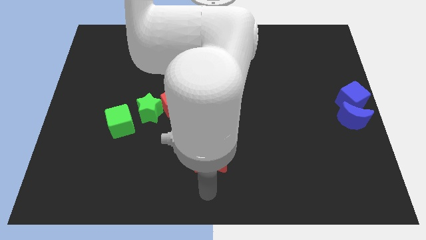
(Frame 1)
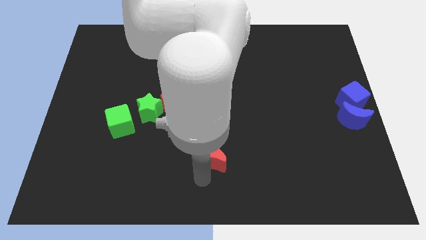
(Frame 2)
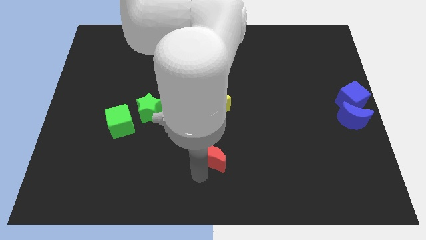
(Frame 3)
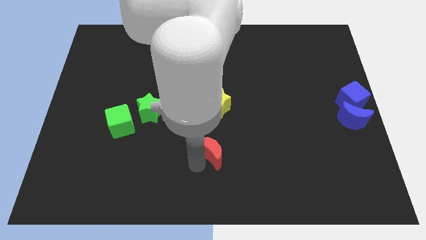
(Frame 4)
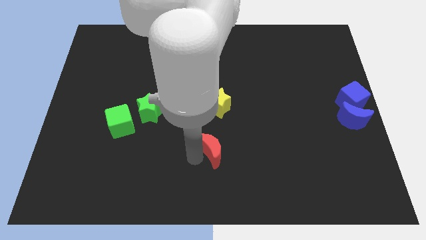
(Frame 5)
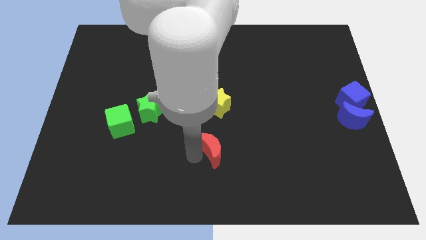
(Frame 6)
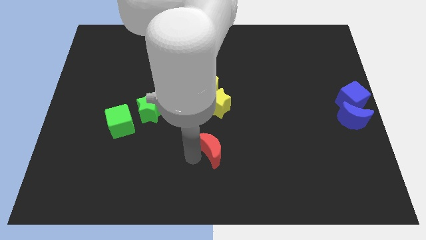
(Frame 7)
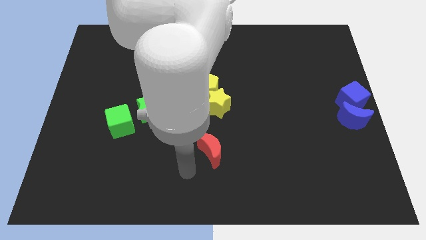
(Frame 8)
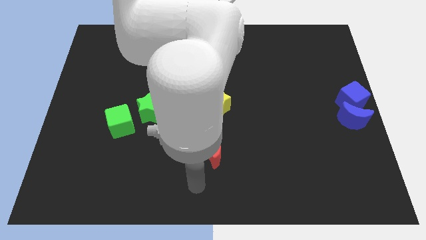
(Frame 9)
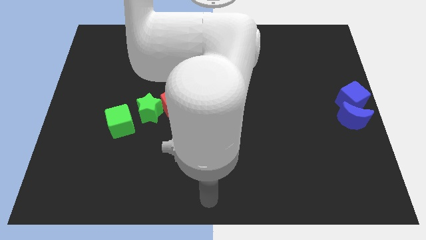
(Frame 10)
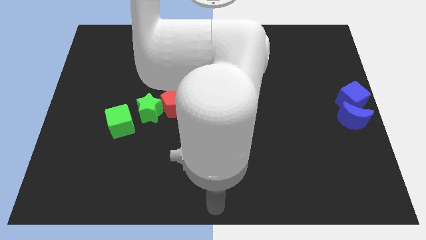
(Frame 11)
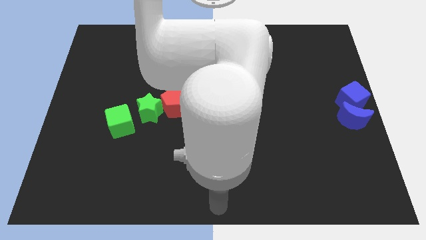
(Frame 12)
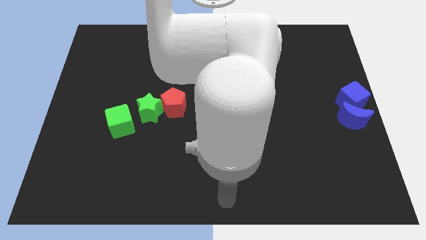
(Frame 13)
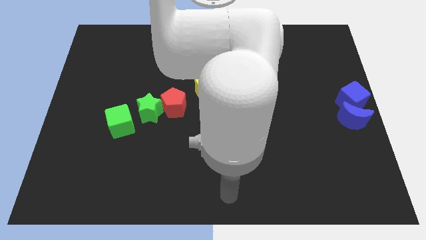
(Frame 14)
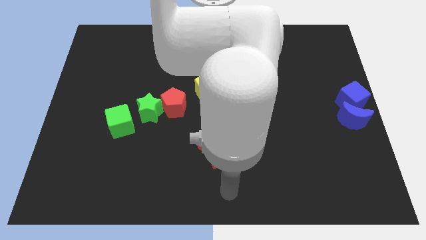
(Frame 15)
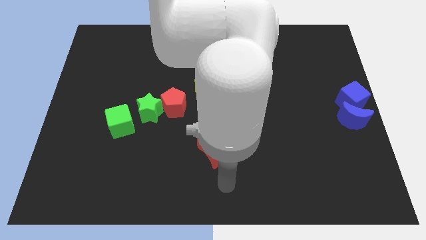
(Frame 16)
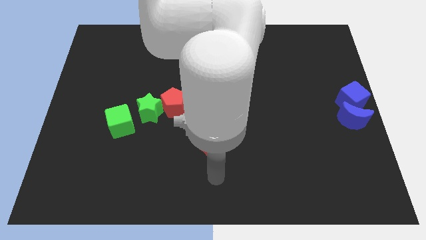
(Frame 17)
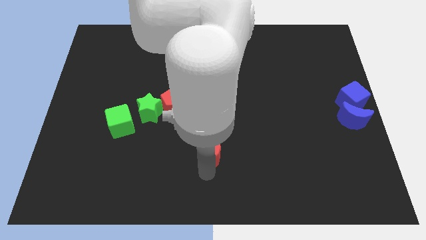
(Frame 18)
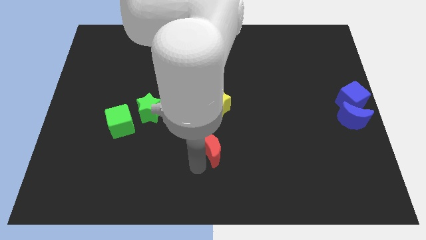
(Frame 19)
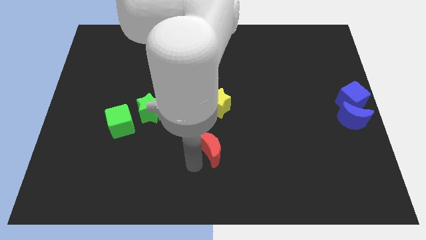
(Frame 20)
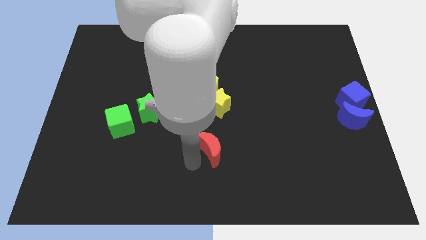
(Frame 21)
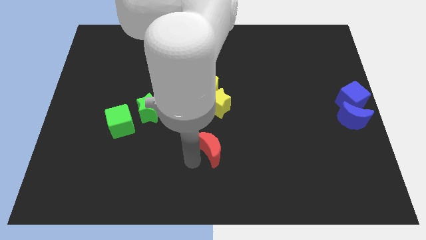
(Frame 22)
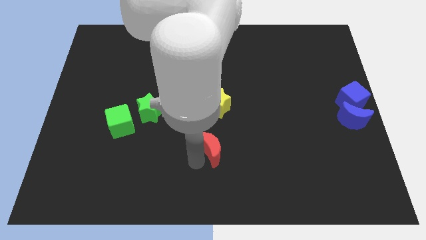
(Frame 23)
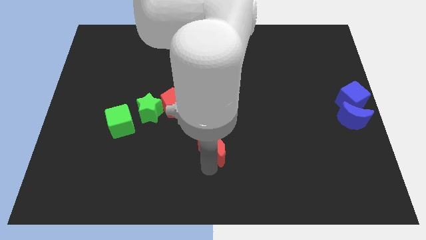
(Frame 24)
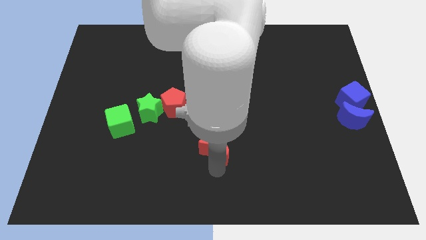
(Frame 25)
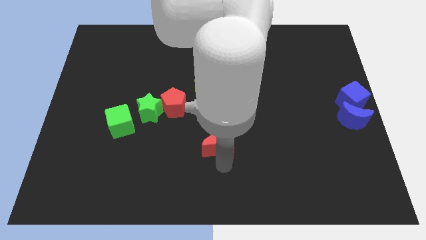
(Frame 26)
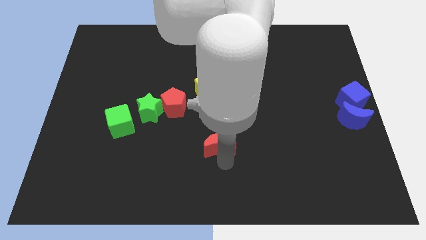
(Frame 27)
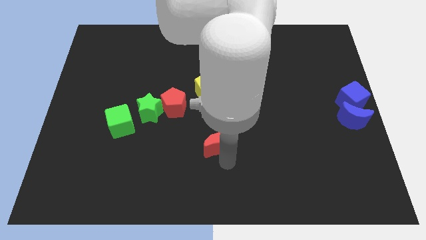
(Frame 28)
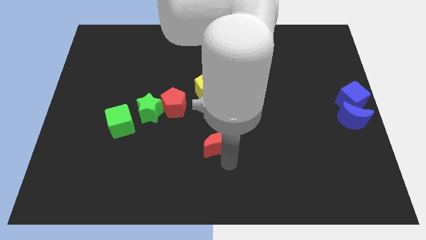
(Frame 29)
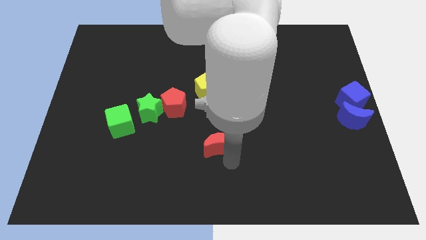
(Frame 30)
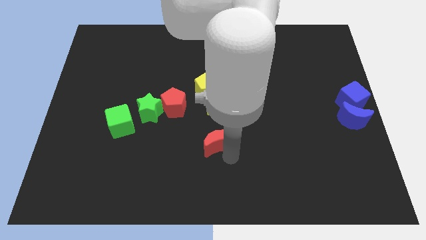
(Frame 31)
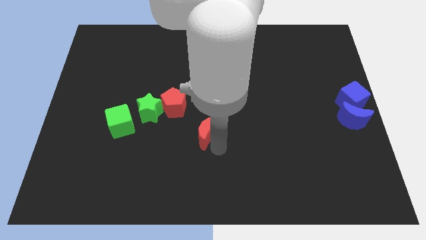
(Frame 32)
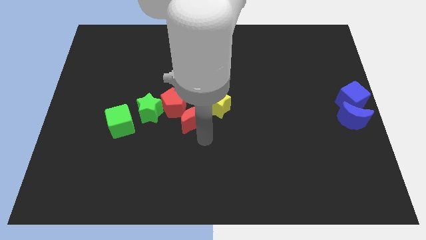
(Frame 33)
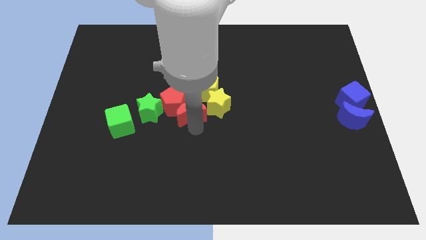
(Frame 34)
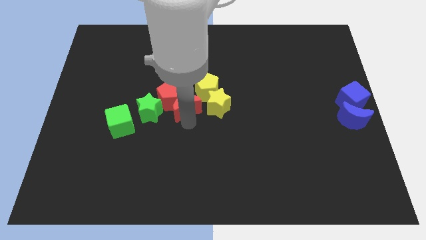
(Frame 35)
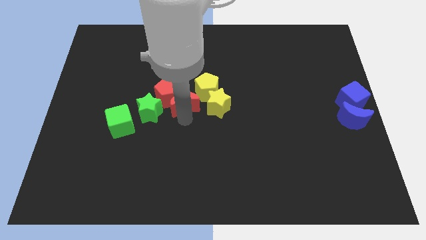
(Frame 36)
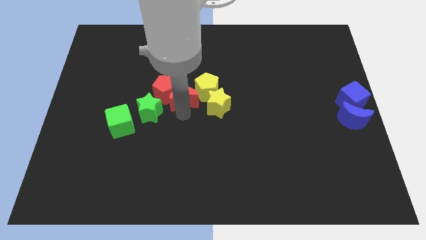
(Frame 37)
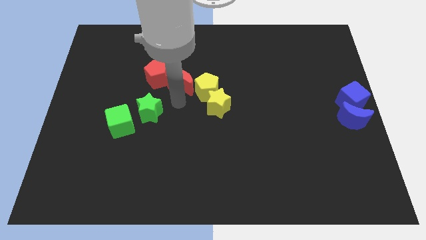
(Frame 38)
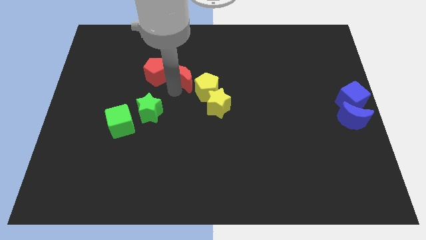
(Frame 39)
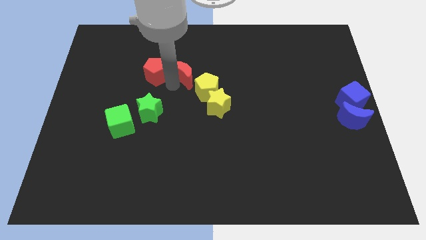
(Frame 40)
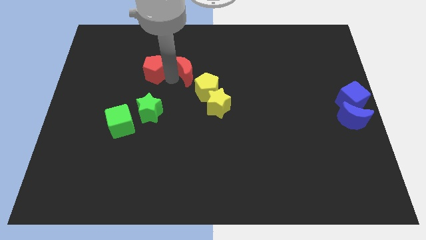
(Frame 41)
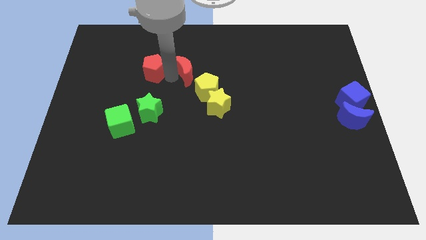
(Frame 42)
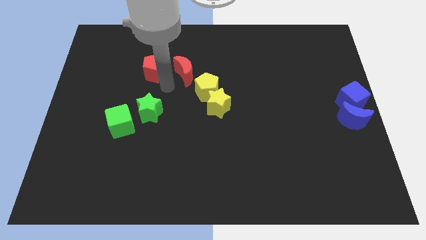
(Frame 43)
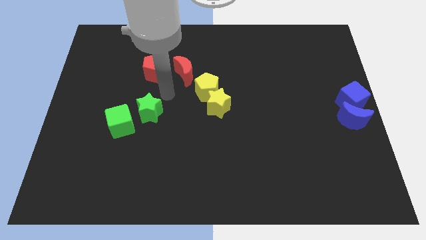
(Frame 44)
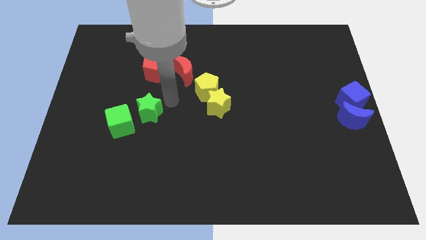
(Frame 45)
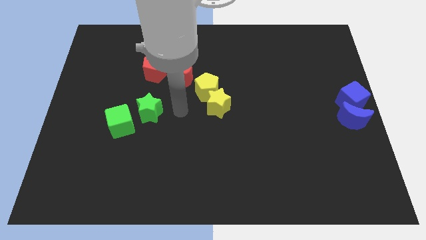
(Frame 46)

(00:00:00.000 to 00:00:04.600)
push the red pentagon with the red crescent towards the top left of the board

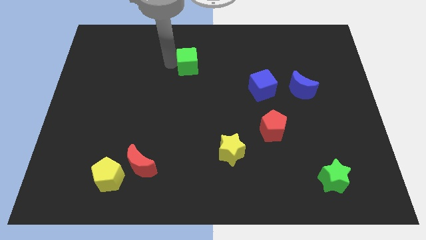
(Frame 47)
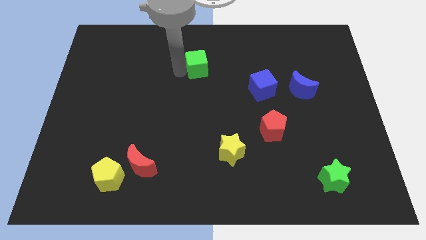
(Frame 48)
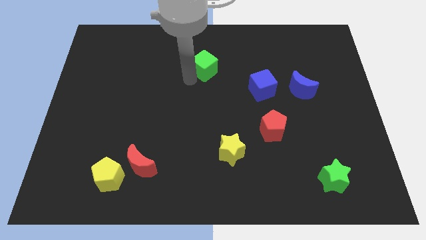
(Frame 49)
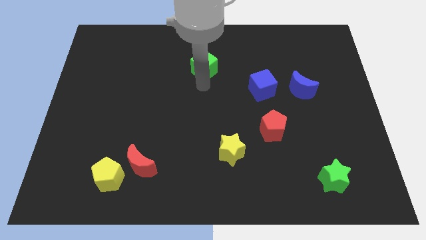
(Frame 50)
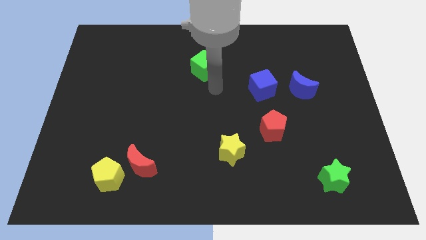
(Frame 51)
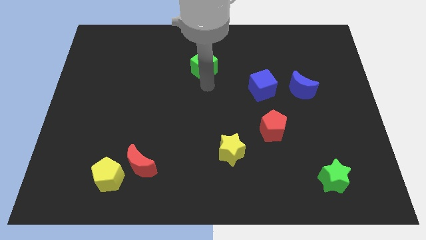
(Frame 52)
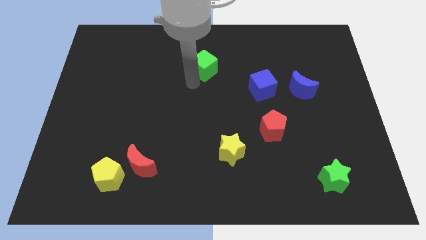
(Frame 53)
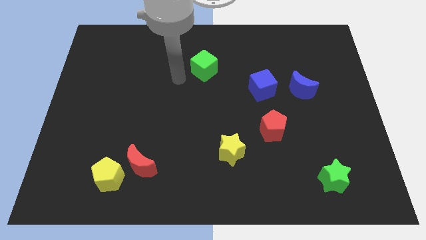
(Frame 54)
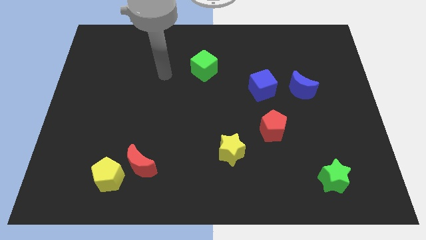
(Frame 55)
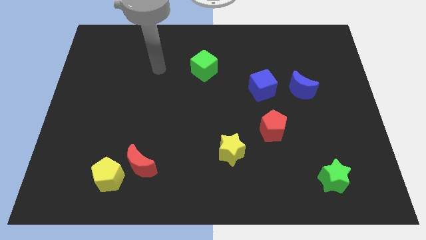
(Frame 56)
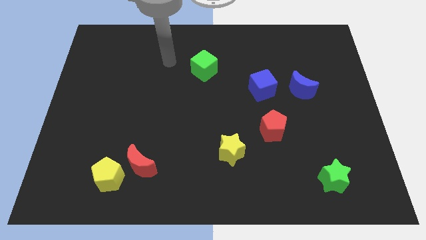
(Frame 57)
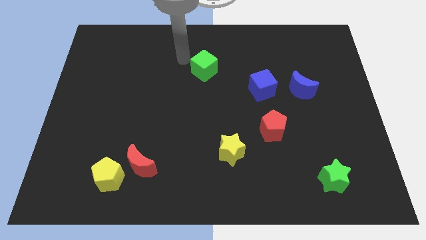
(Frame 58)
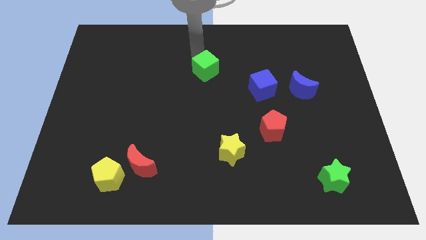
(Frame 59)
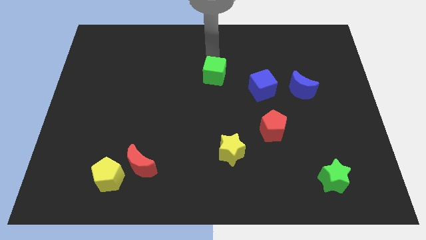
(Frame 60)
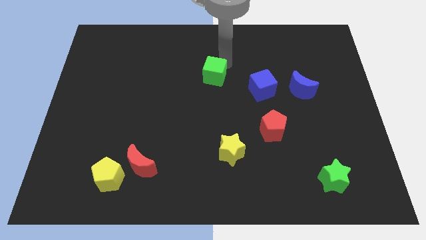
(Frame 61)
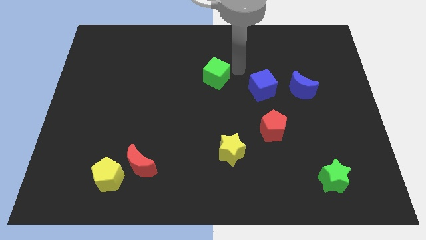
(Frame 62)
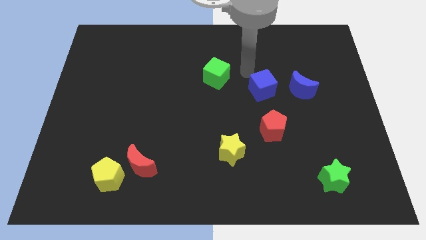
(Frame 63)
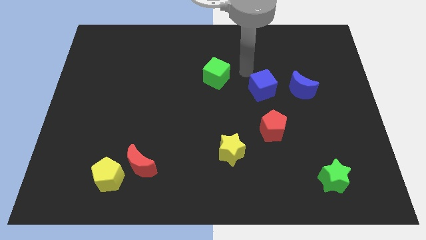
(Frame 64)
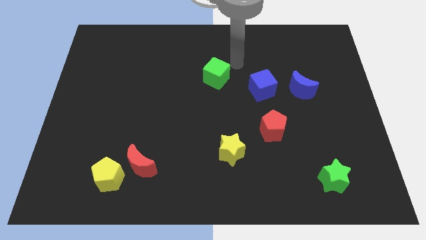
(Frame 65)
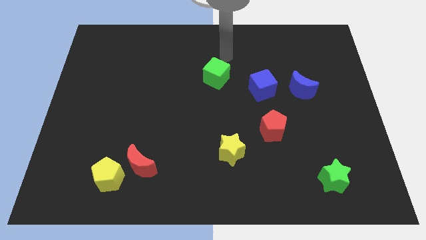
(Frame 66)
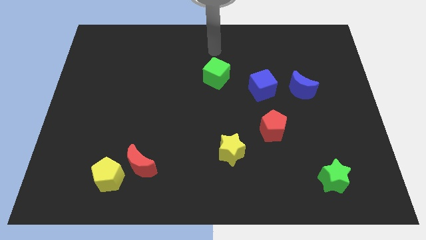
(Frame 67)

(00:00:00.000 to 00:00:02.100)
slide green cube towards blue cube

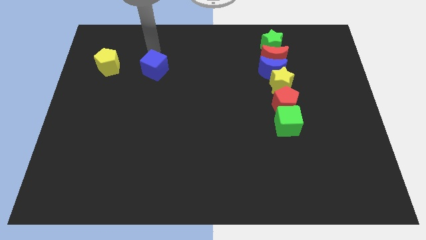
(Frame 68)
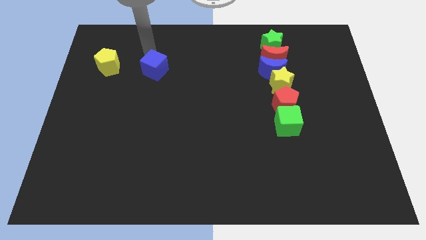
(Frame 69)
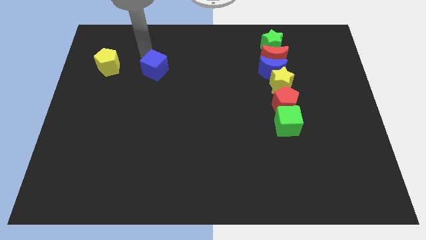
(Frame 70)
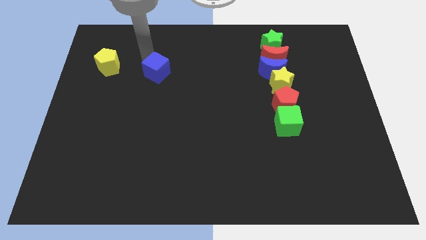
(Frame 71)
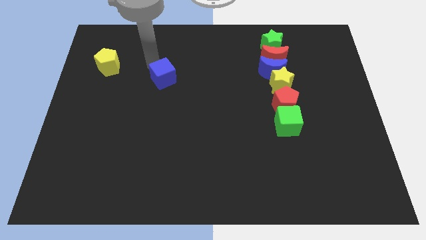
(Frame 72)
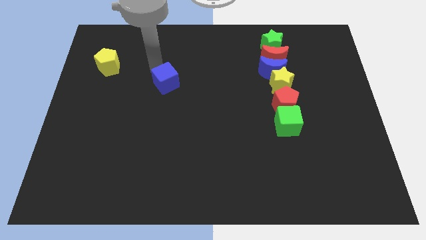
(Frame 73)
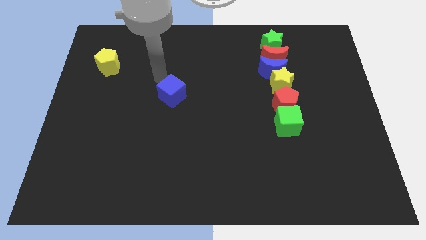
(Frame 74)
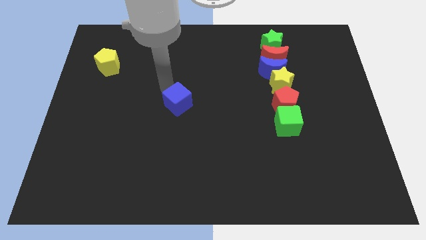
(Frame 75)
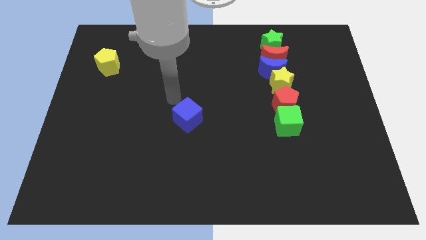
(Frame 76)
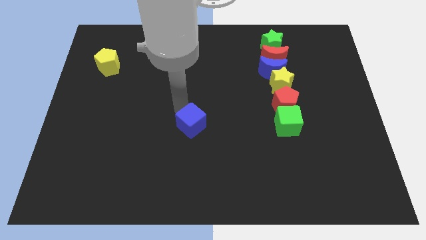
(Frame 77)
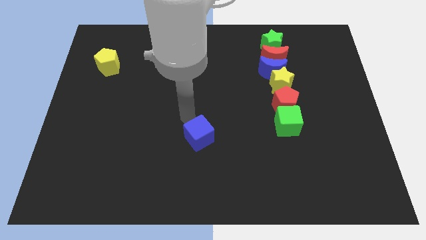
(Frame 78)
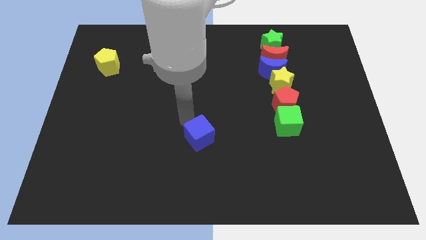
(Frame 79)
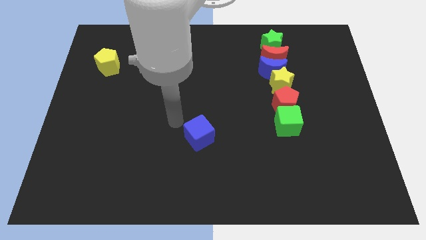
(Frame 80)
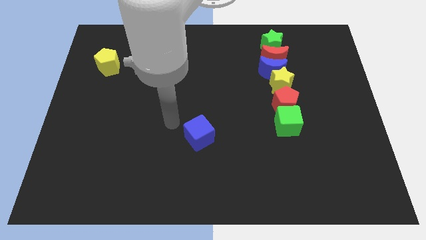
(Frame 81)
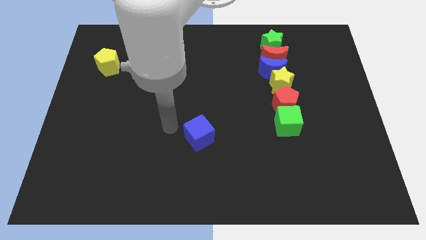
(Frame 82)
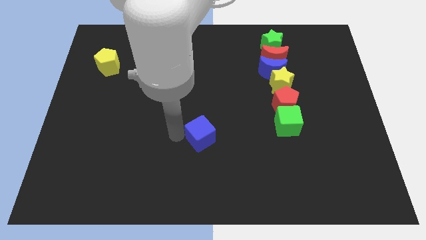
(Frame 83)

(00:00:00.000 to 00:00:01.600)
push the blue cube to the bottom of the board

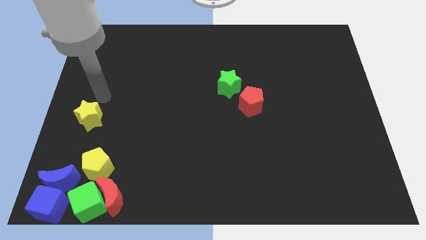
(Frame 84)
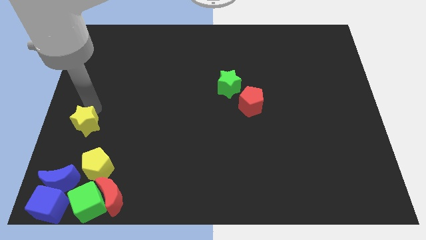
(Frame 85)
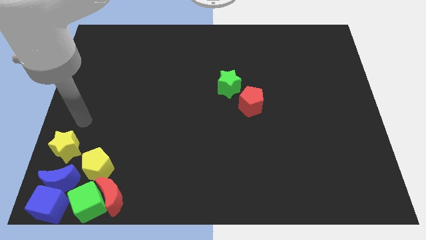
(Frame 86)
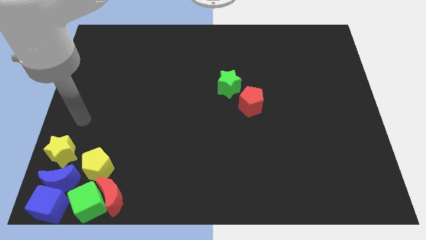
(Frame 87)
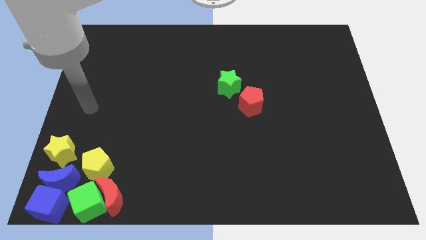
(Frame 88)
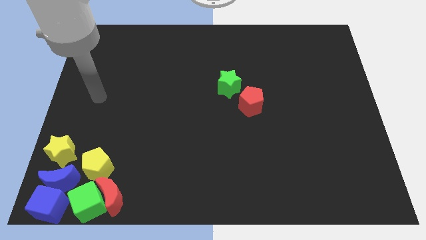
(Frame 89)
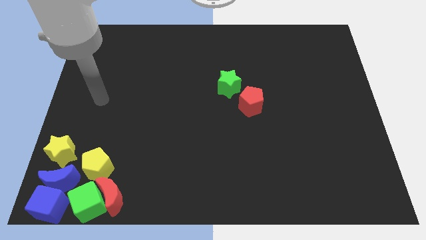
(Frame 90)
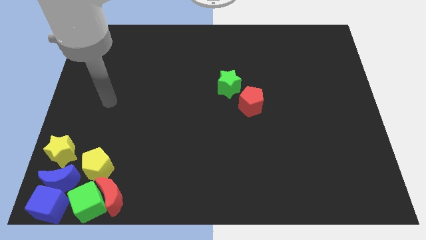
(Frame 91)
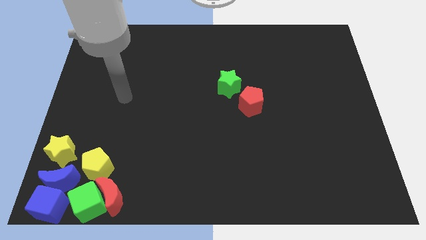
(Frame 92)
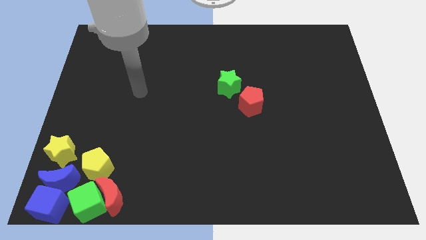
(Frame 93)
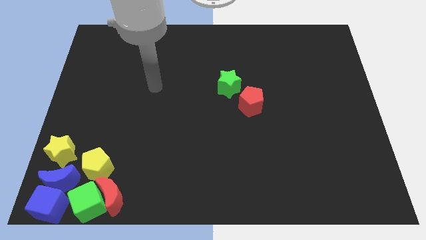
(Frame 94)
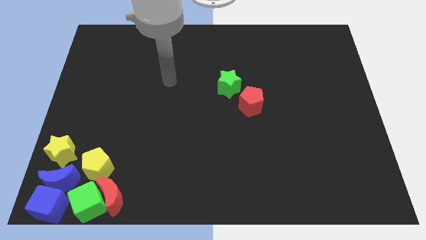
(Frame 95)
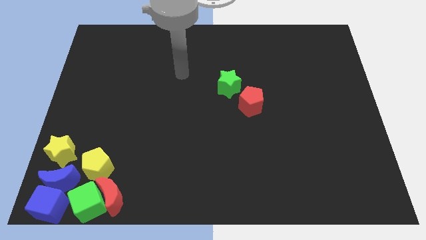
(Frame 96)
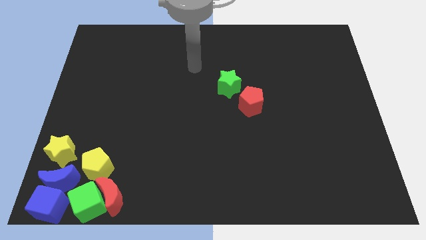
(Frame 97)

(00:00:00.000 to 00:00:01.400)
move the yellow star vertically above the blue moon
